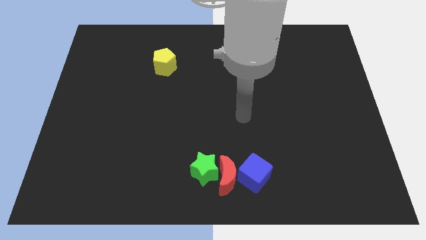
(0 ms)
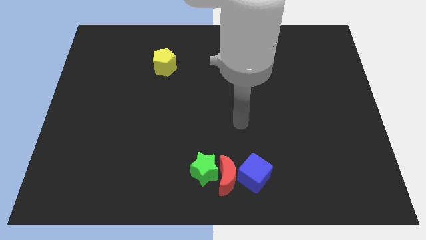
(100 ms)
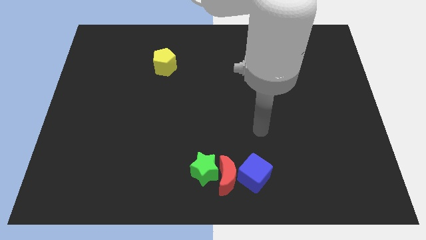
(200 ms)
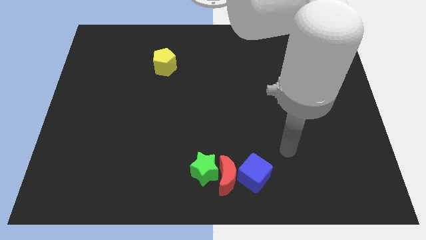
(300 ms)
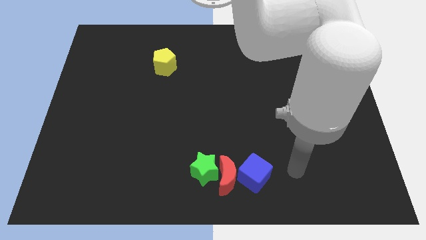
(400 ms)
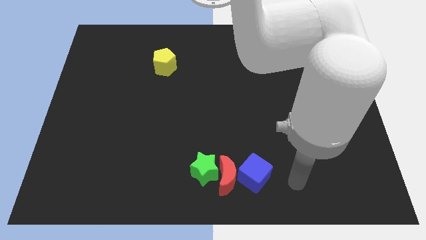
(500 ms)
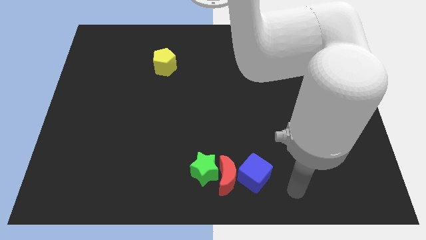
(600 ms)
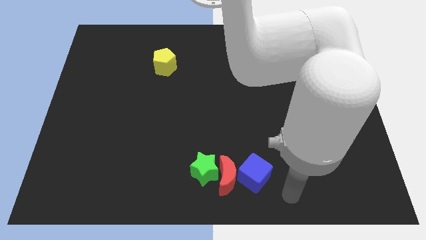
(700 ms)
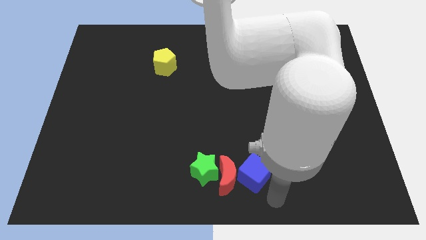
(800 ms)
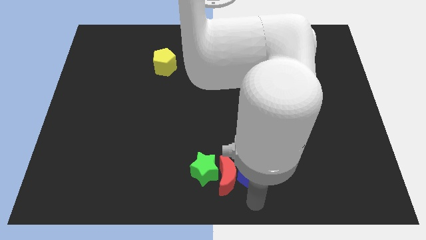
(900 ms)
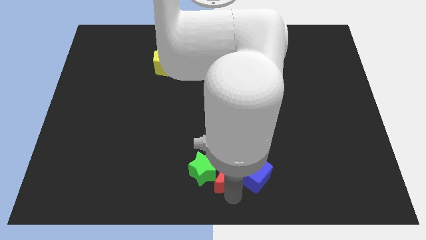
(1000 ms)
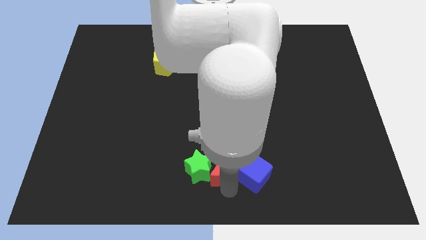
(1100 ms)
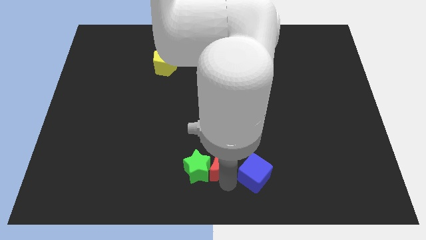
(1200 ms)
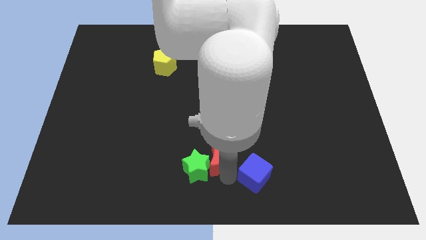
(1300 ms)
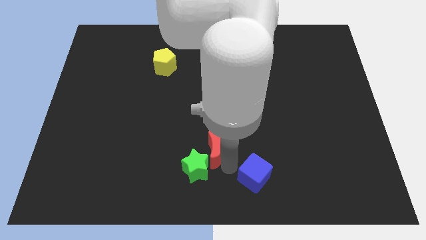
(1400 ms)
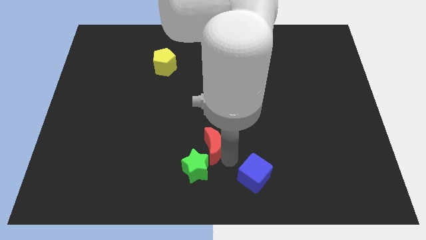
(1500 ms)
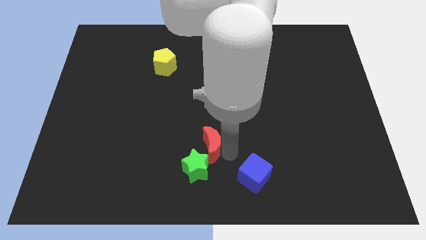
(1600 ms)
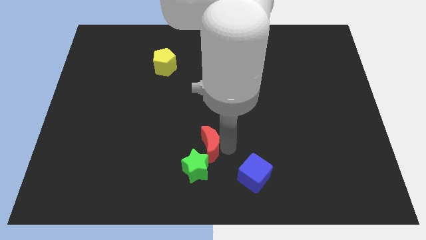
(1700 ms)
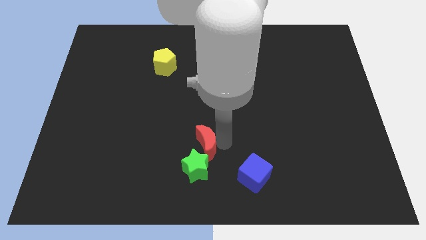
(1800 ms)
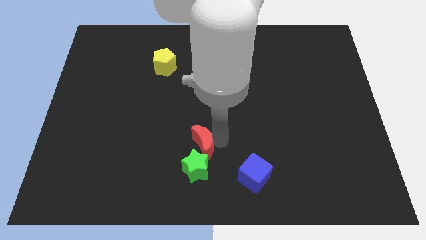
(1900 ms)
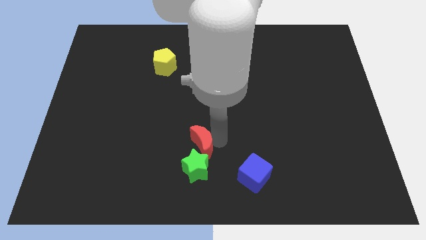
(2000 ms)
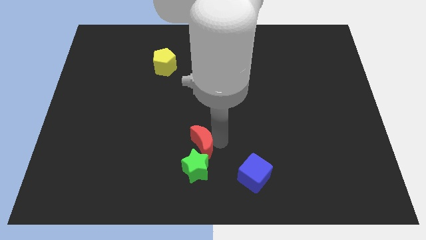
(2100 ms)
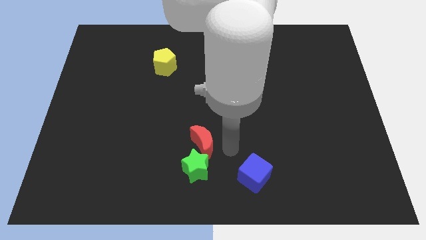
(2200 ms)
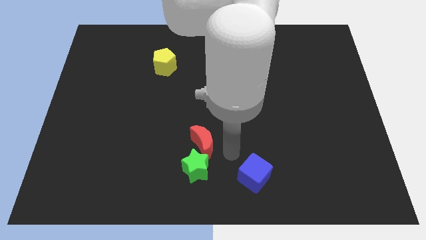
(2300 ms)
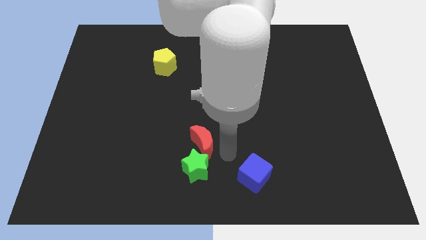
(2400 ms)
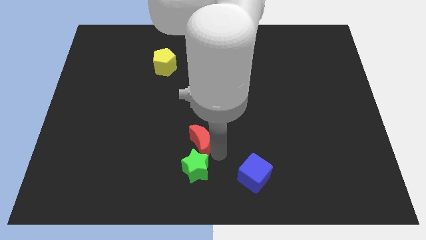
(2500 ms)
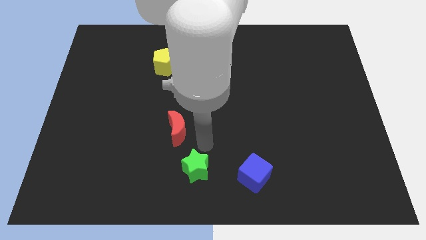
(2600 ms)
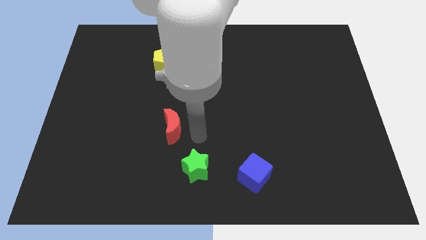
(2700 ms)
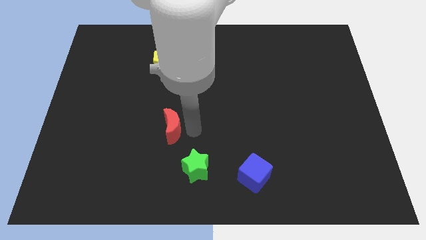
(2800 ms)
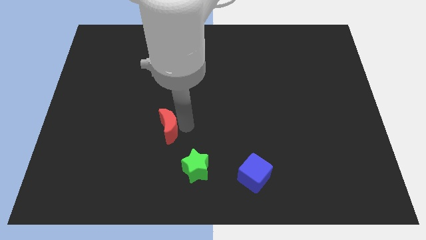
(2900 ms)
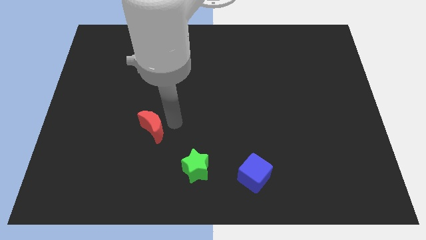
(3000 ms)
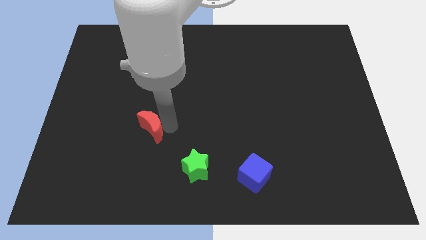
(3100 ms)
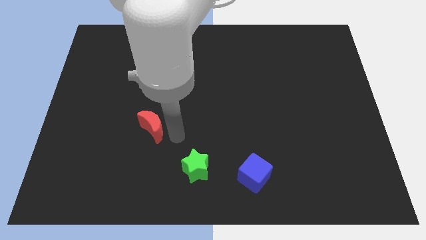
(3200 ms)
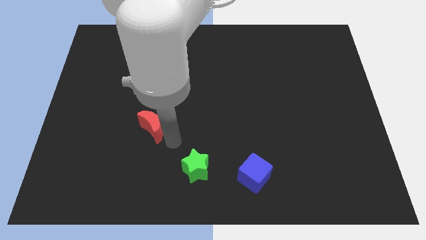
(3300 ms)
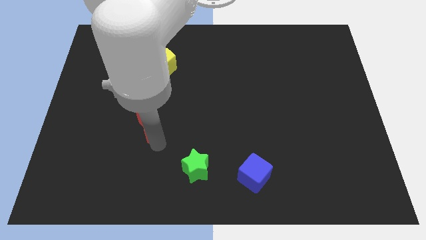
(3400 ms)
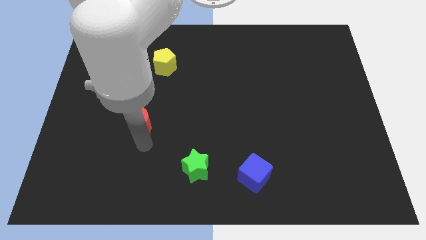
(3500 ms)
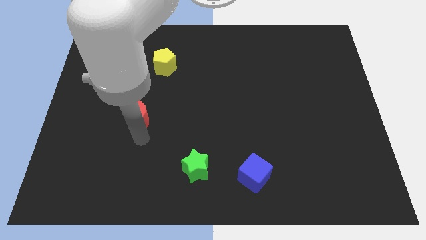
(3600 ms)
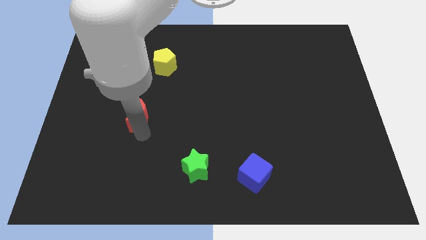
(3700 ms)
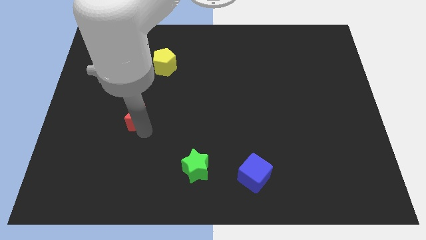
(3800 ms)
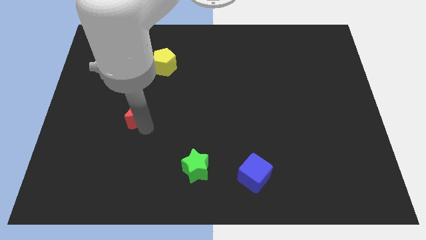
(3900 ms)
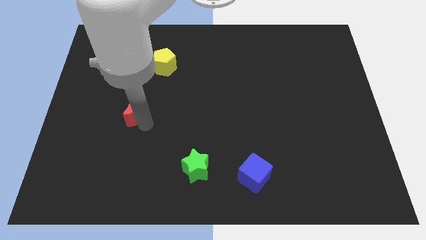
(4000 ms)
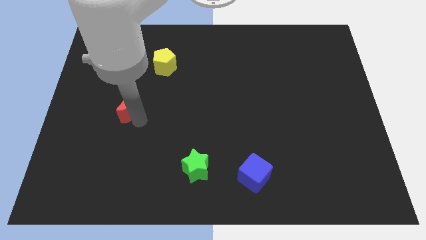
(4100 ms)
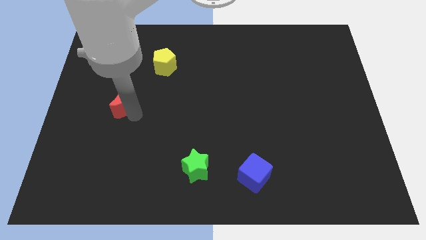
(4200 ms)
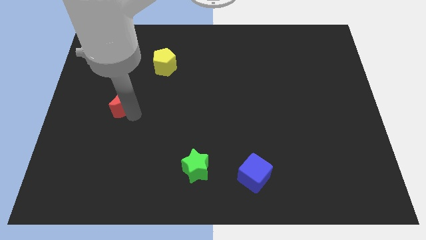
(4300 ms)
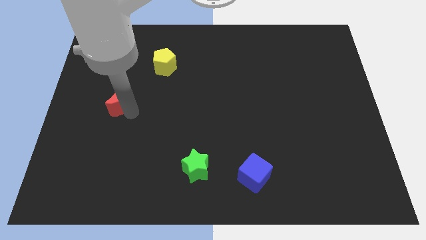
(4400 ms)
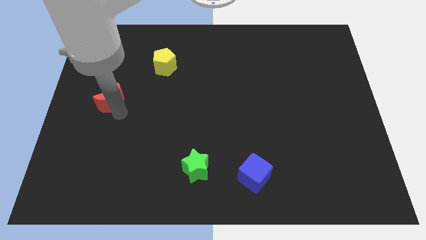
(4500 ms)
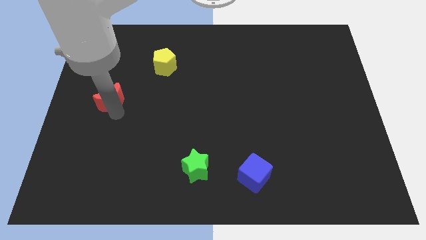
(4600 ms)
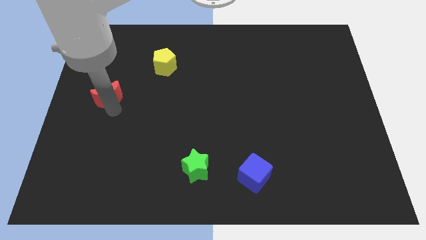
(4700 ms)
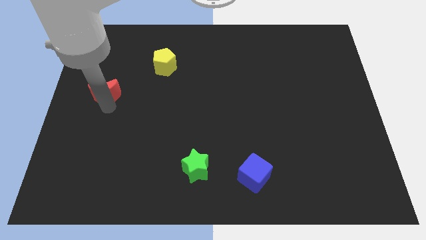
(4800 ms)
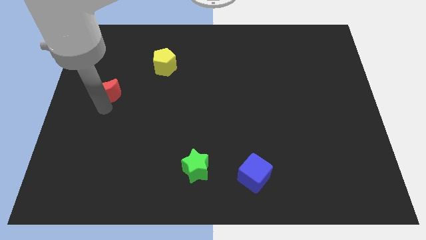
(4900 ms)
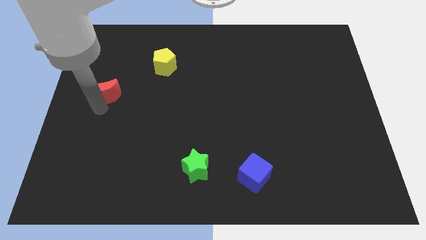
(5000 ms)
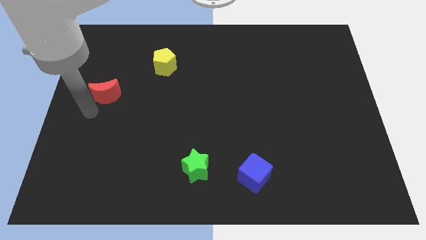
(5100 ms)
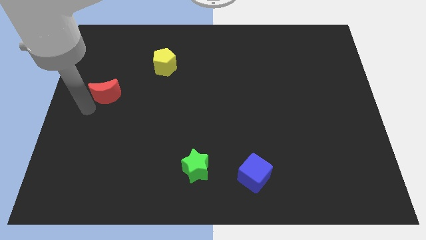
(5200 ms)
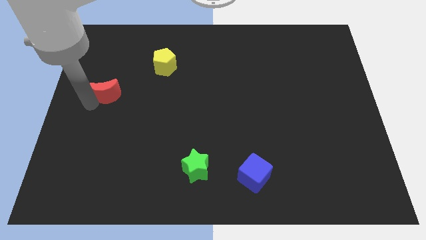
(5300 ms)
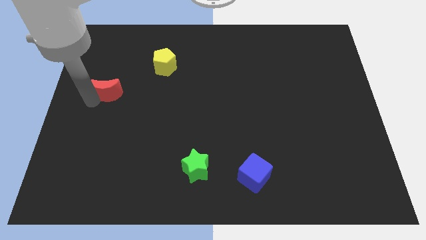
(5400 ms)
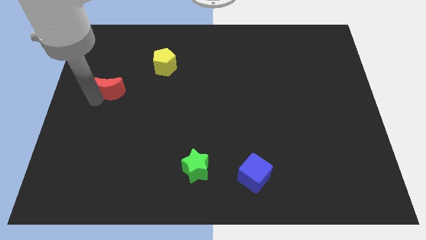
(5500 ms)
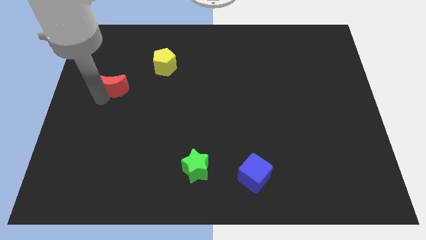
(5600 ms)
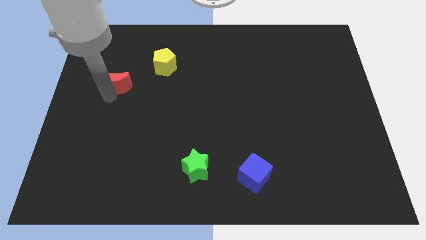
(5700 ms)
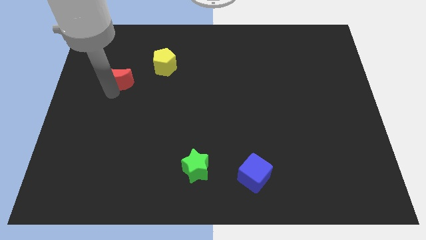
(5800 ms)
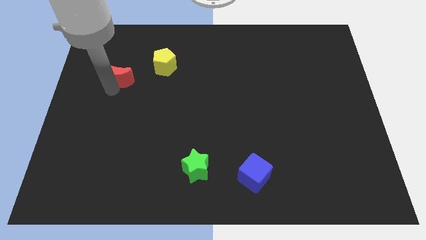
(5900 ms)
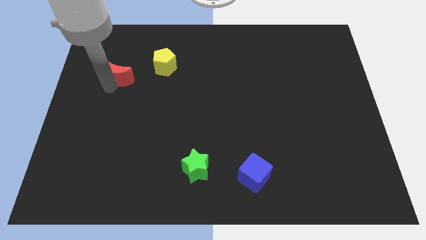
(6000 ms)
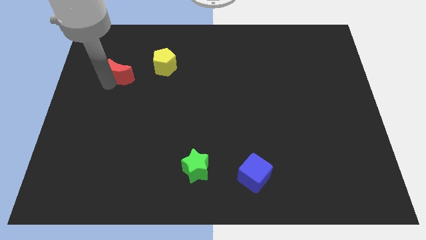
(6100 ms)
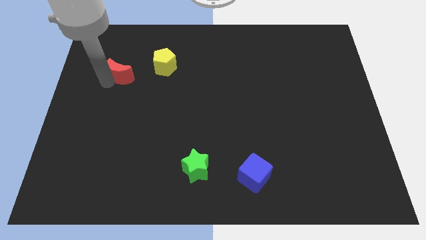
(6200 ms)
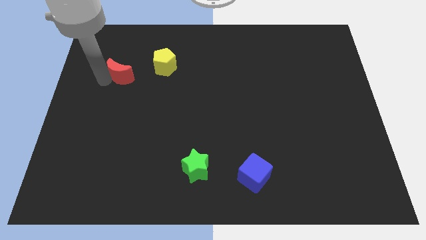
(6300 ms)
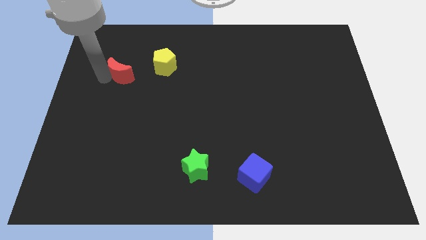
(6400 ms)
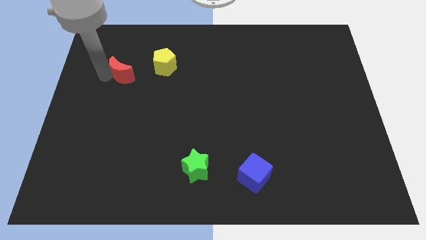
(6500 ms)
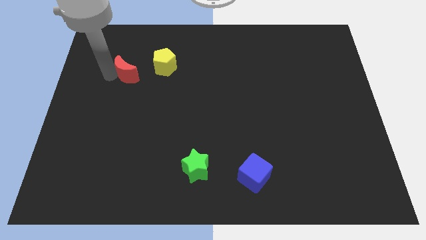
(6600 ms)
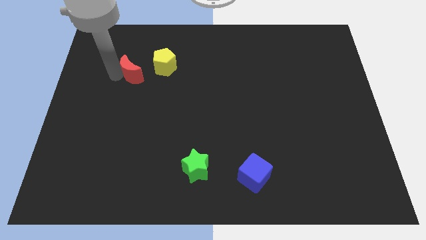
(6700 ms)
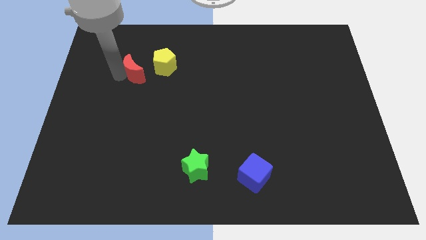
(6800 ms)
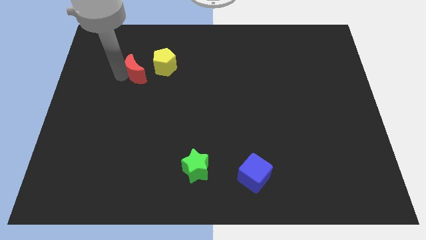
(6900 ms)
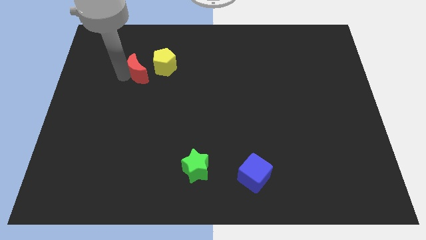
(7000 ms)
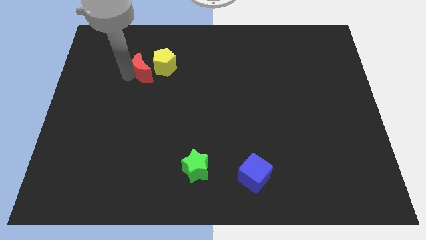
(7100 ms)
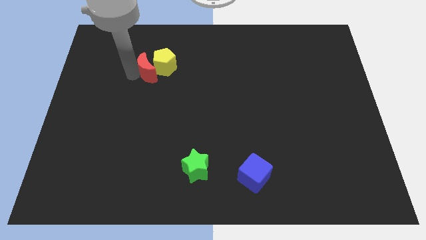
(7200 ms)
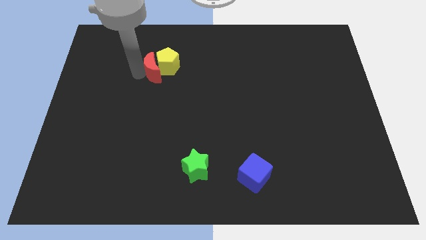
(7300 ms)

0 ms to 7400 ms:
slide the red block towards the yellow block

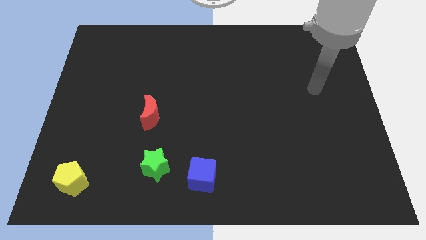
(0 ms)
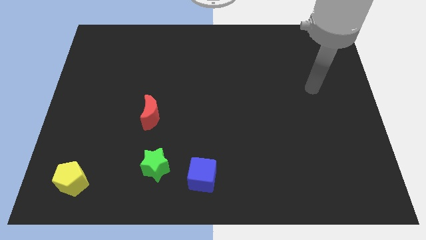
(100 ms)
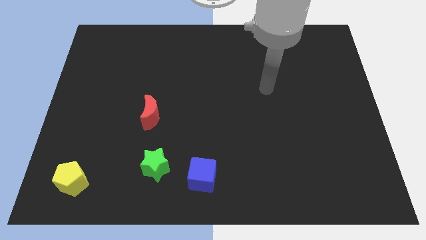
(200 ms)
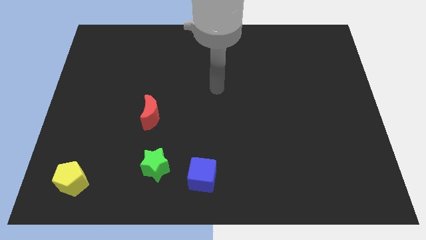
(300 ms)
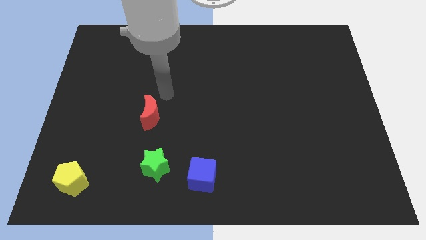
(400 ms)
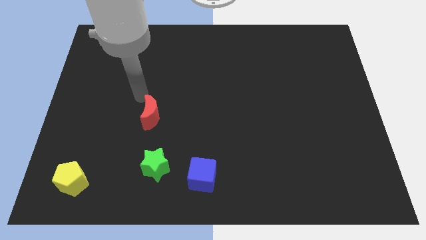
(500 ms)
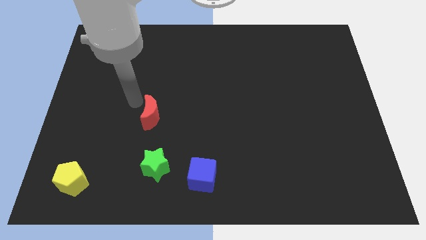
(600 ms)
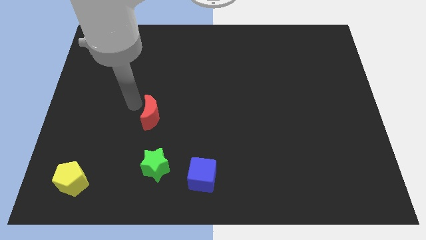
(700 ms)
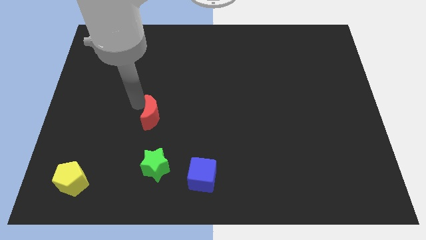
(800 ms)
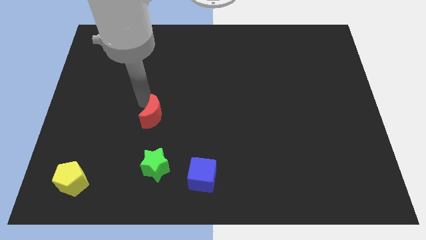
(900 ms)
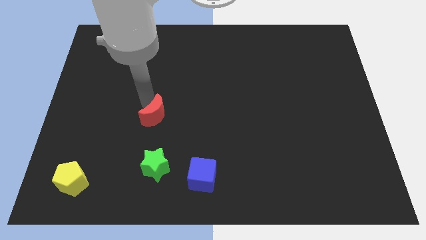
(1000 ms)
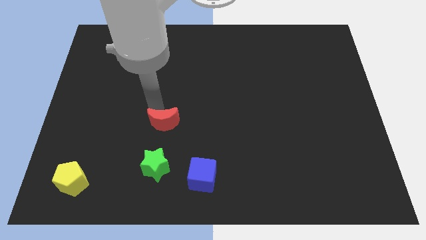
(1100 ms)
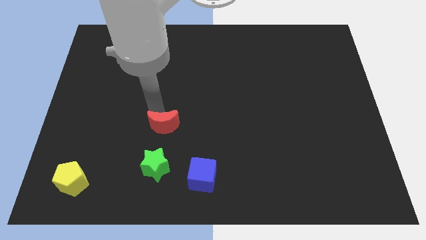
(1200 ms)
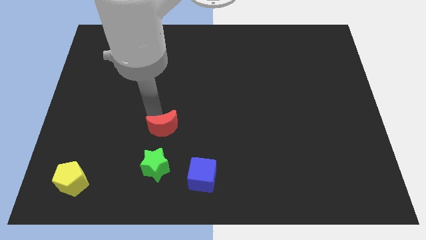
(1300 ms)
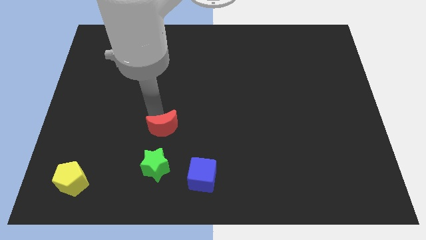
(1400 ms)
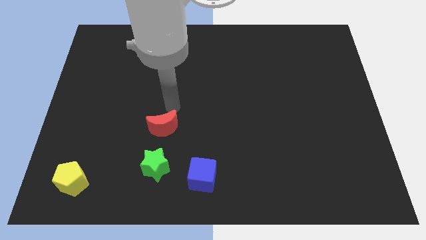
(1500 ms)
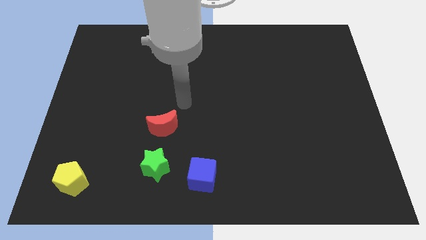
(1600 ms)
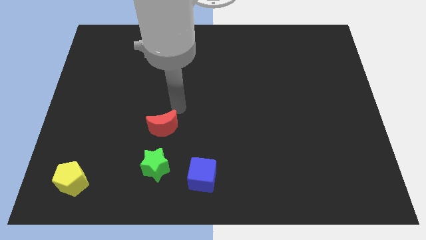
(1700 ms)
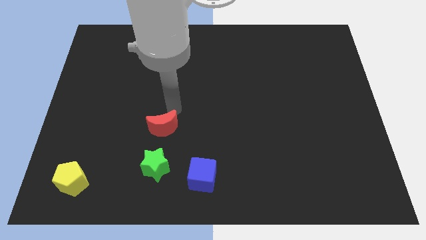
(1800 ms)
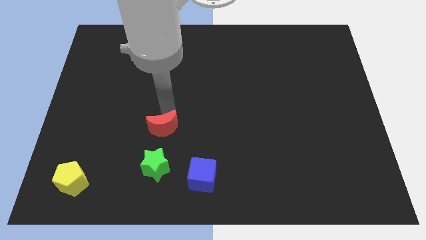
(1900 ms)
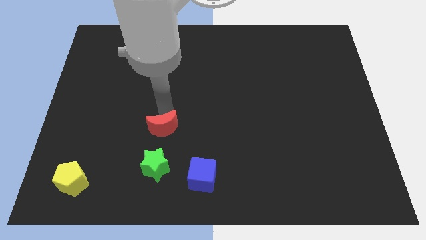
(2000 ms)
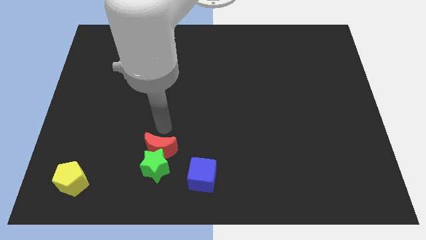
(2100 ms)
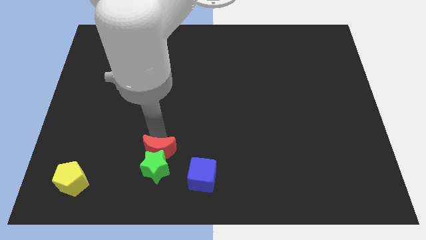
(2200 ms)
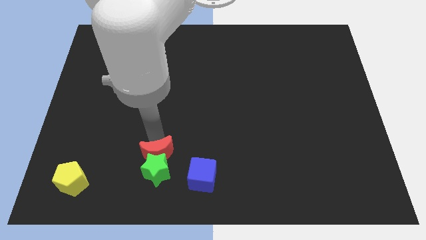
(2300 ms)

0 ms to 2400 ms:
slide the red moon to the star
